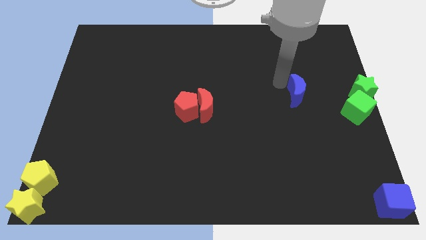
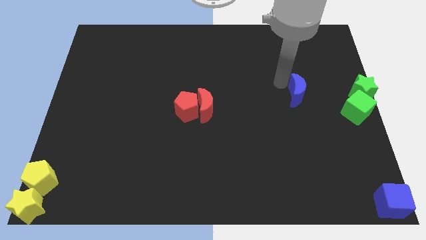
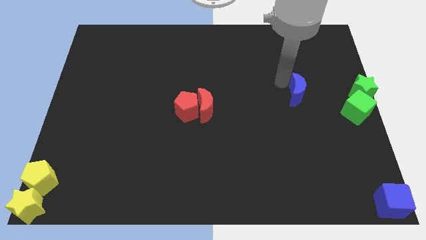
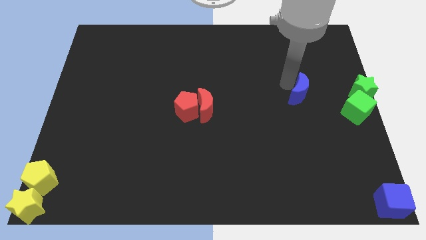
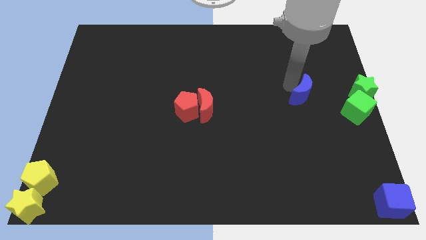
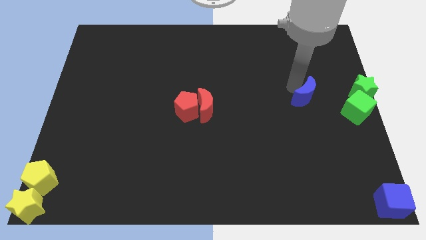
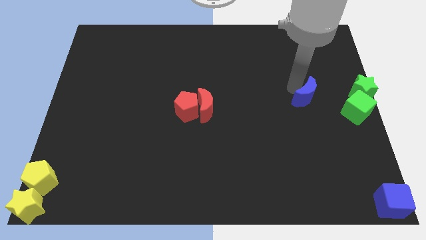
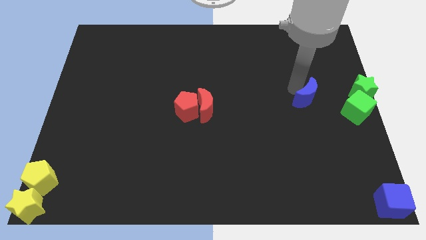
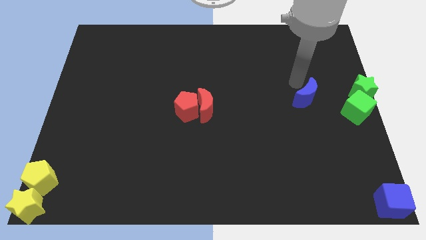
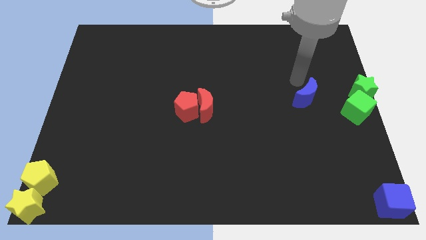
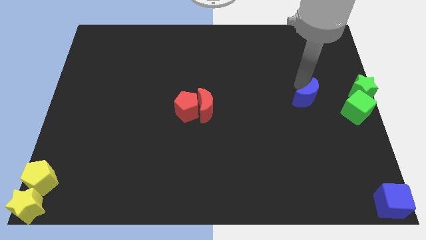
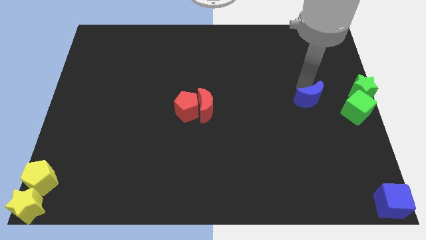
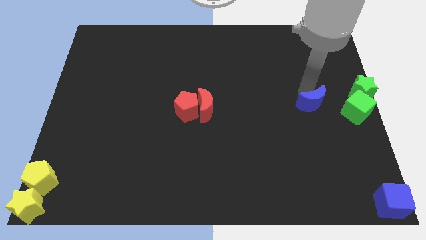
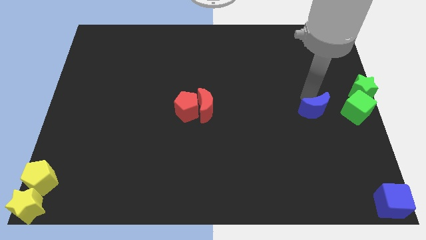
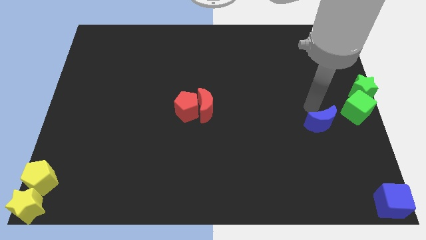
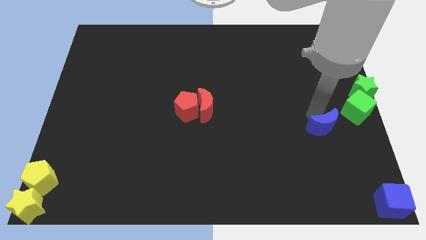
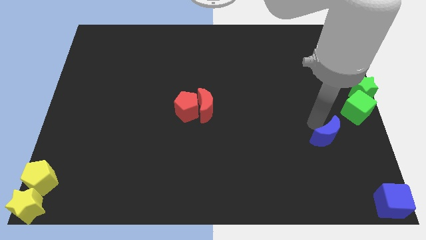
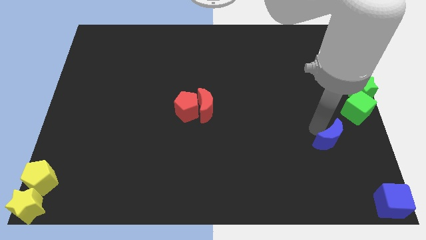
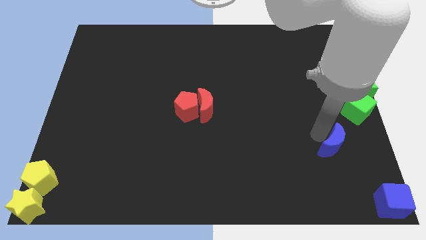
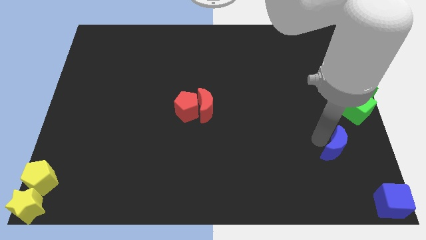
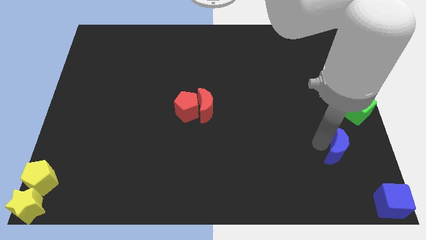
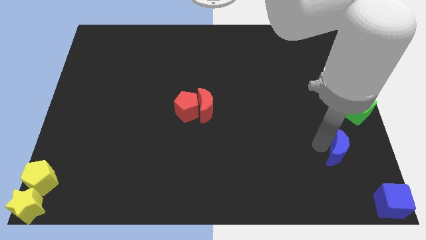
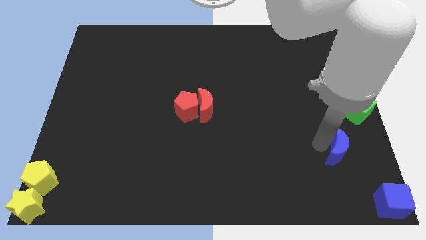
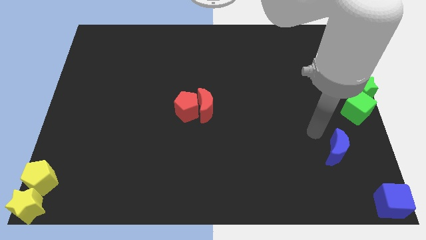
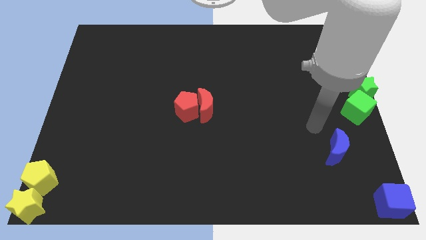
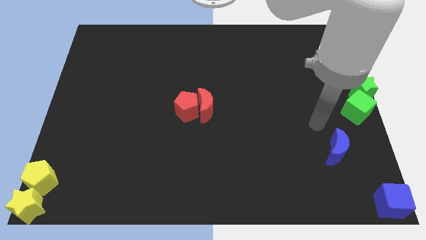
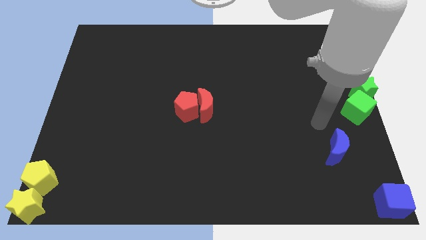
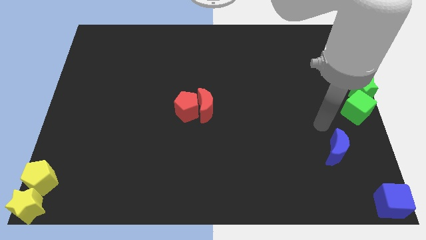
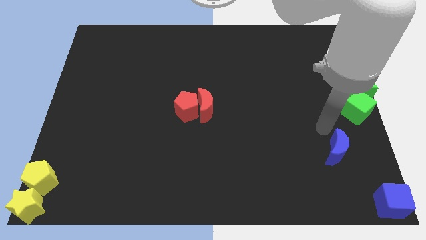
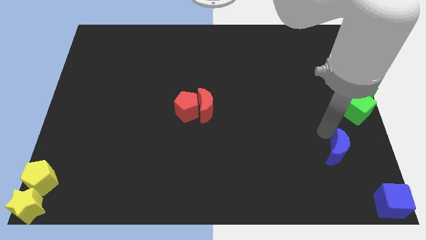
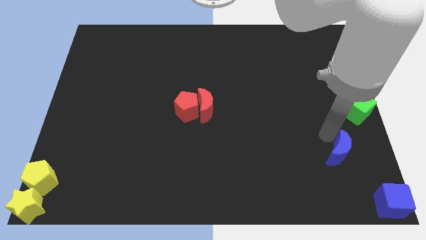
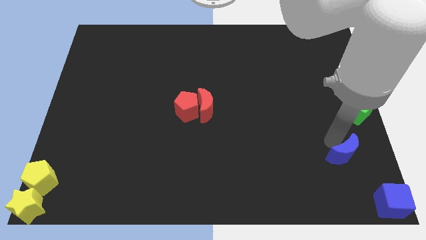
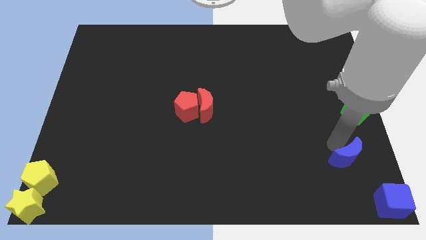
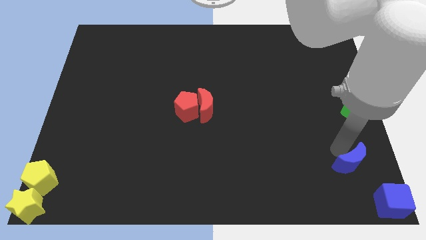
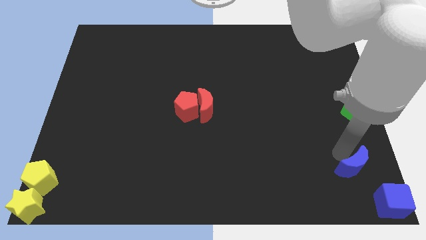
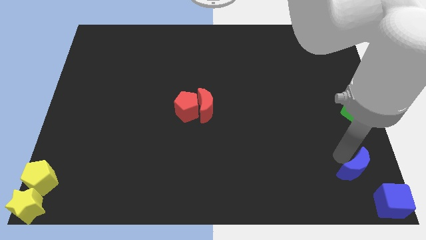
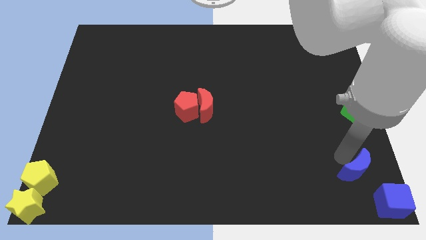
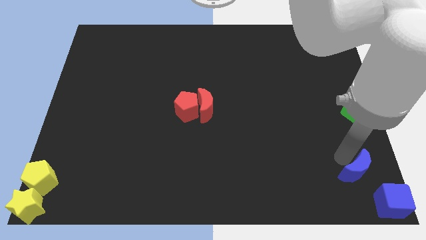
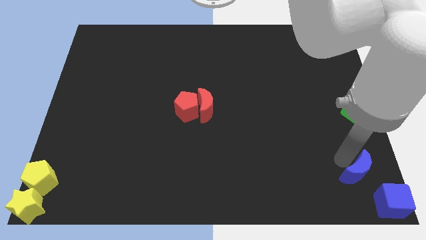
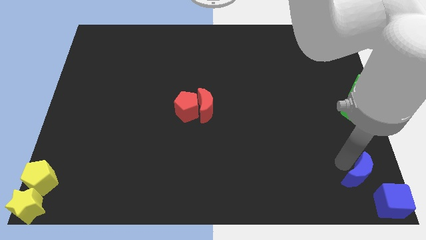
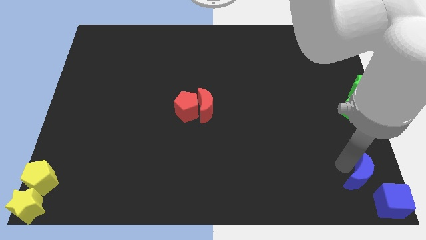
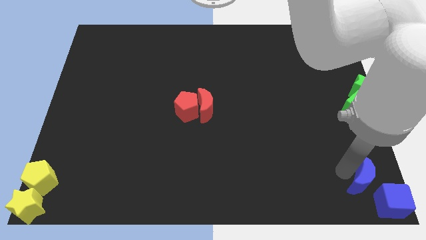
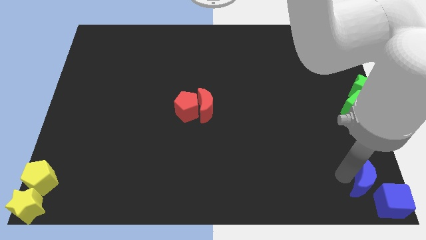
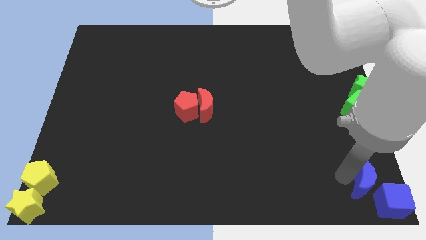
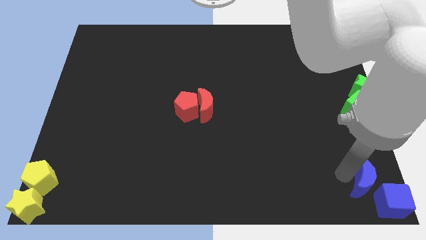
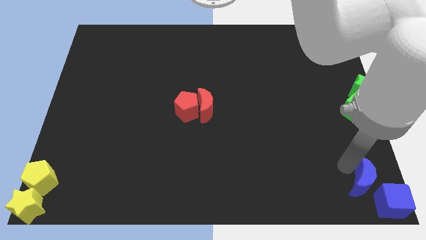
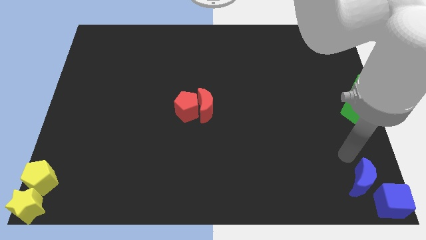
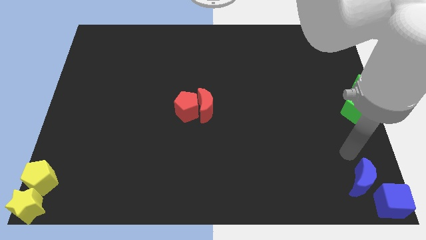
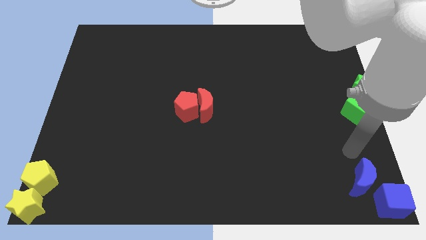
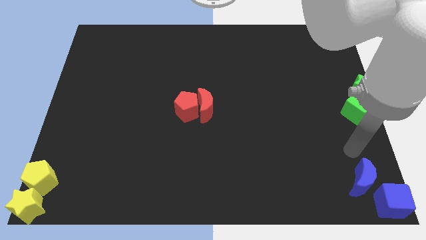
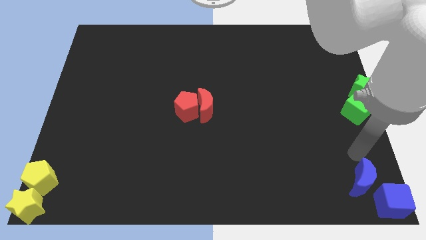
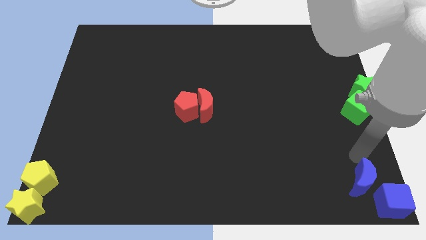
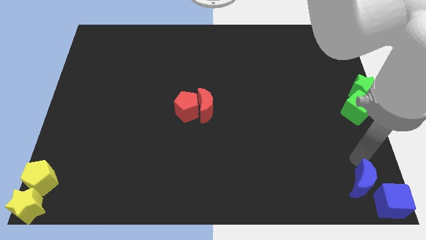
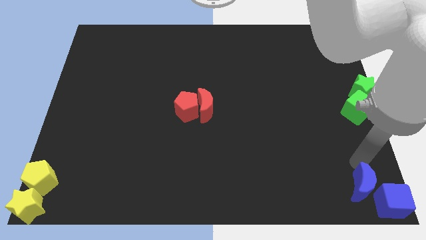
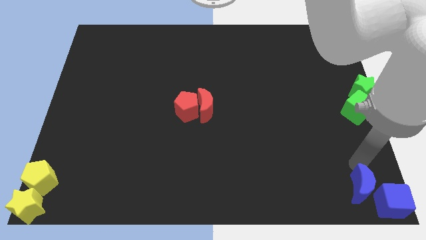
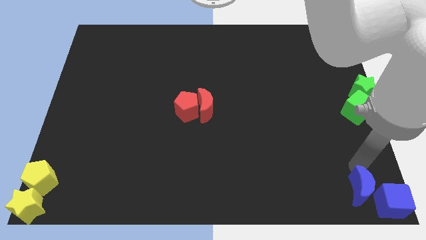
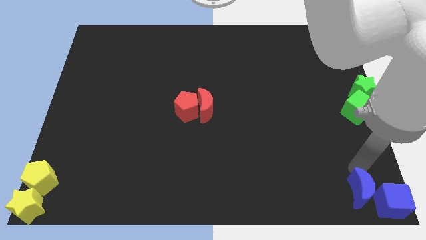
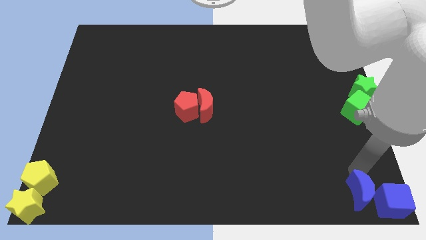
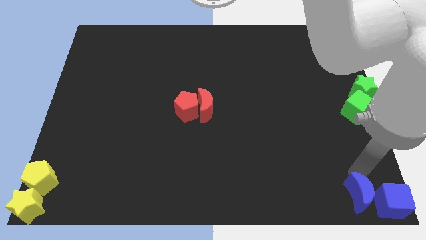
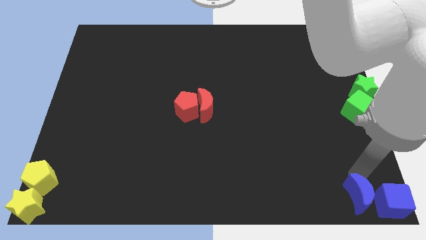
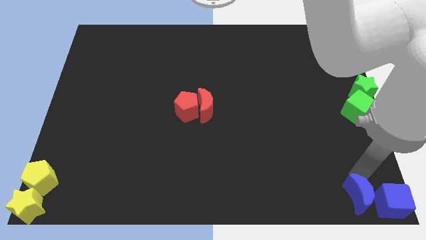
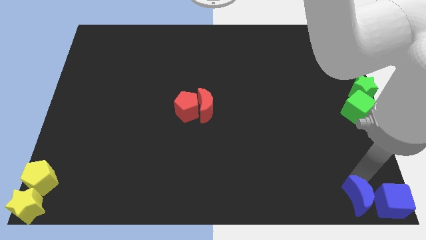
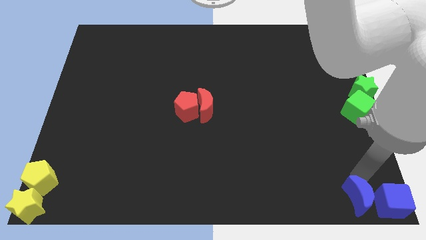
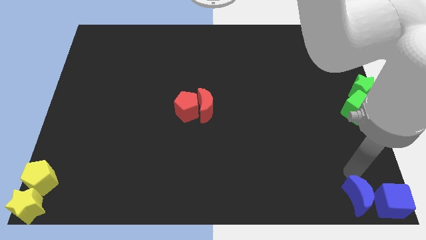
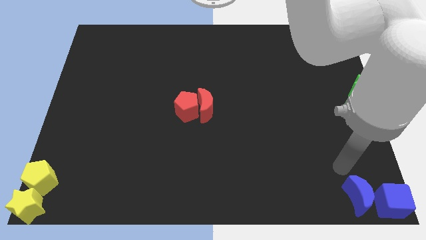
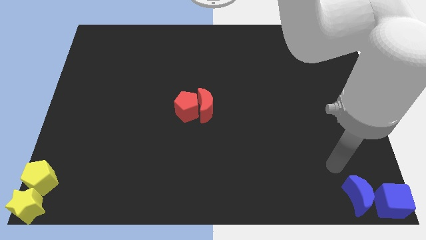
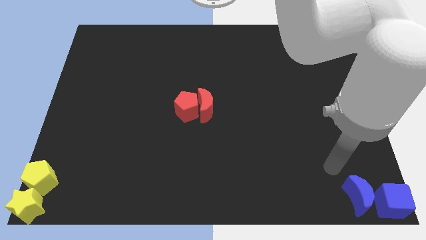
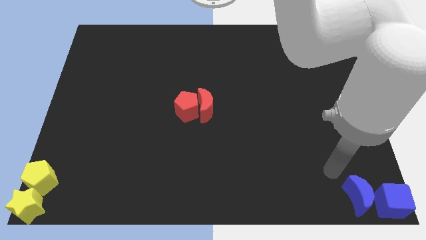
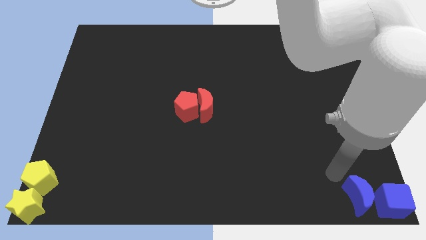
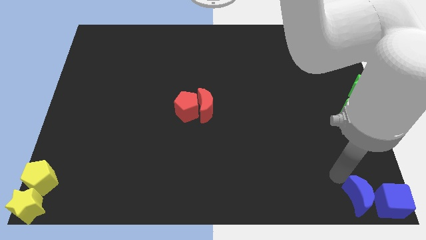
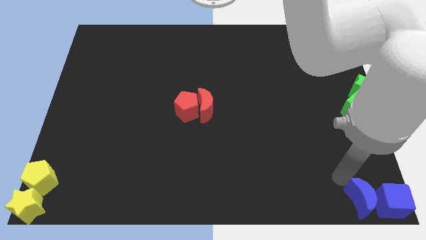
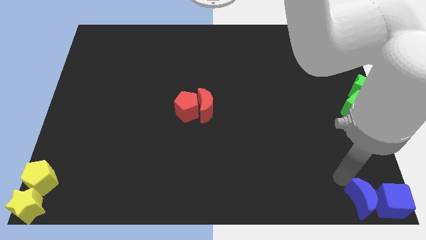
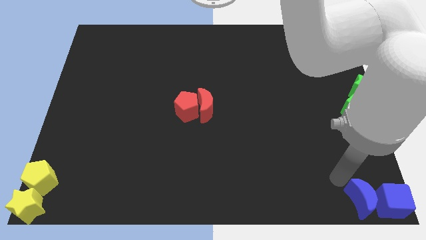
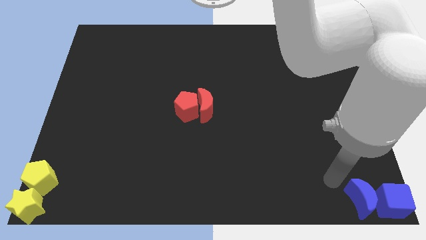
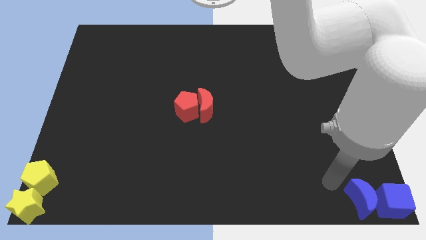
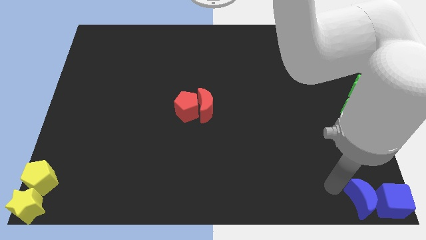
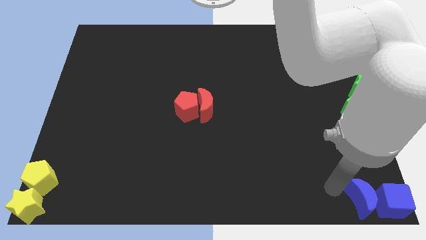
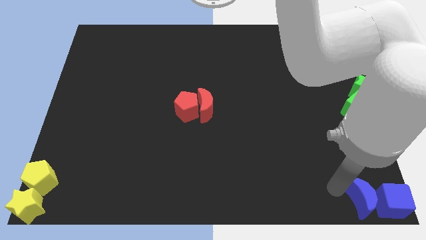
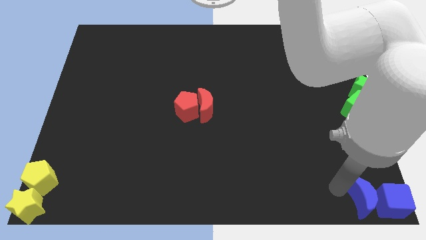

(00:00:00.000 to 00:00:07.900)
place the blue crescent to the left of blue cube

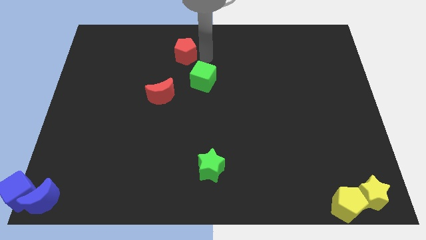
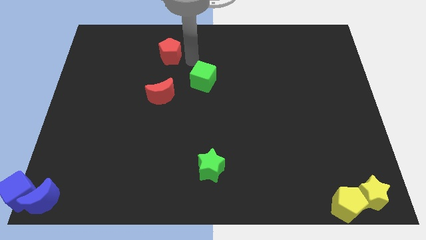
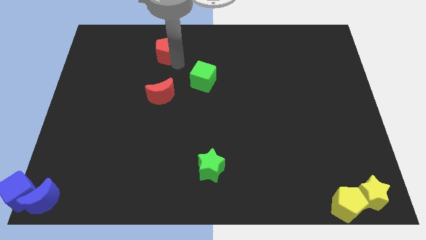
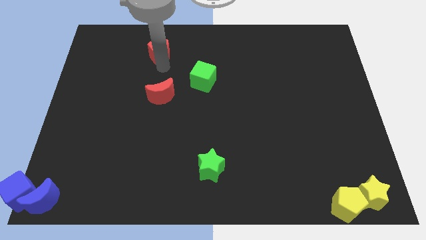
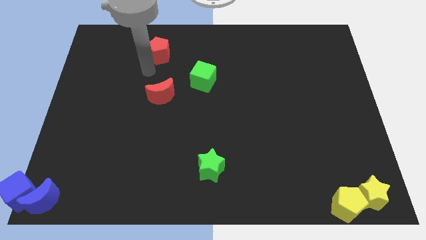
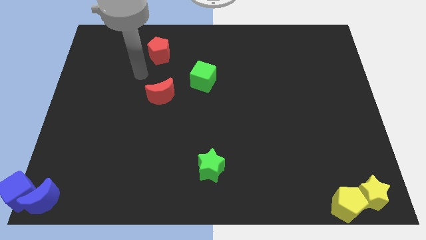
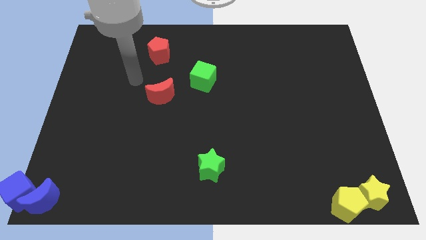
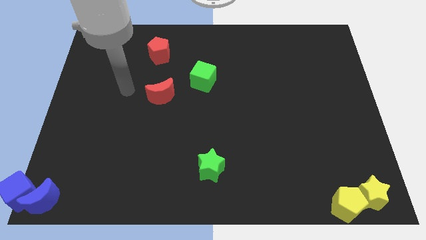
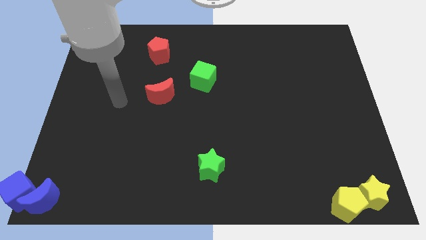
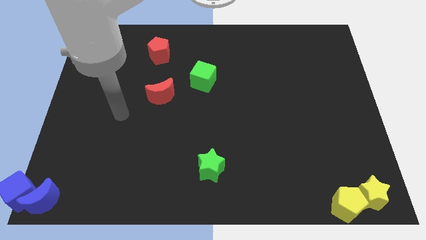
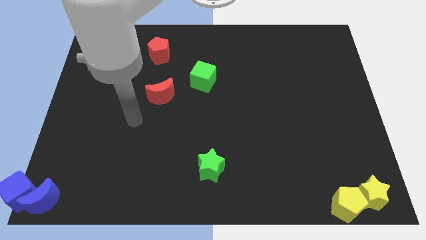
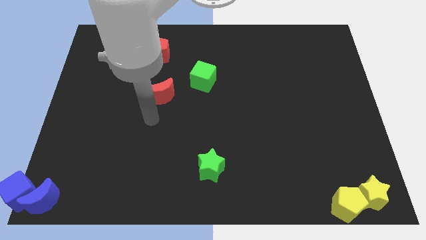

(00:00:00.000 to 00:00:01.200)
push the red pentagon towards left
